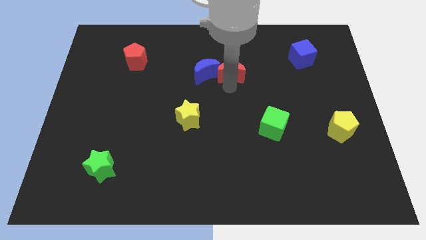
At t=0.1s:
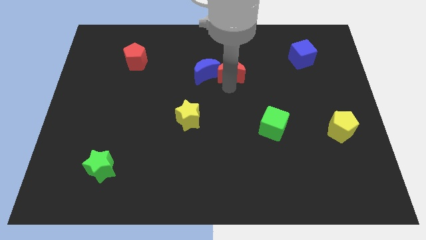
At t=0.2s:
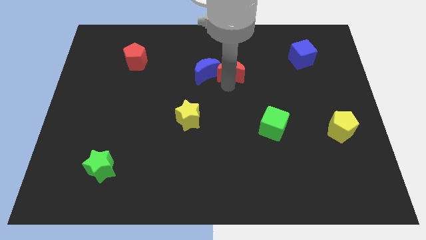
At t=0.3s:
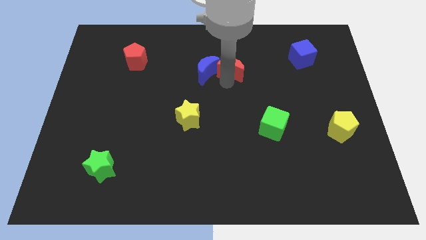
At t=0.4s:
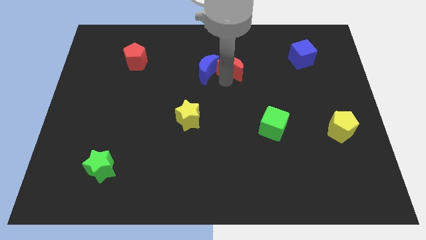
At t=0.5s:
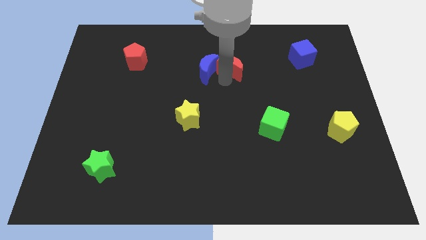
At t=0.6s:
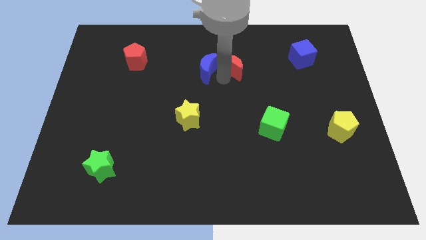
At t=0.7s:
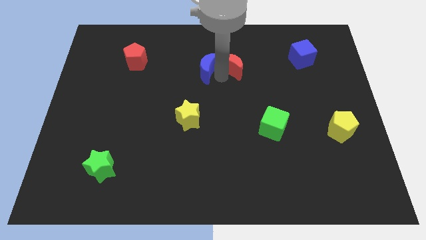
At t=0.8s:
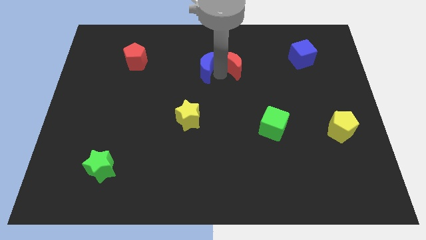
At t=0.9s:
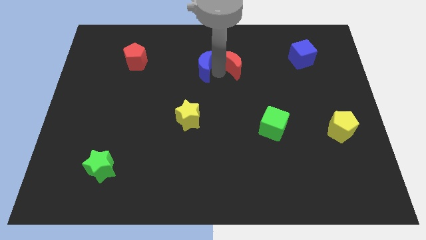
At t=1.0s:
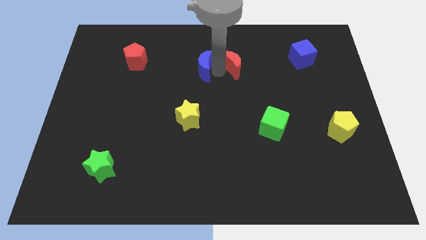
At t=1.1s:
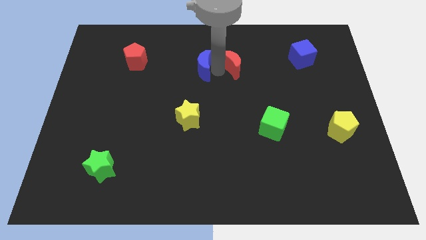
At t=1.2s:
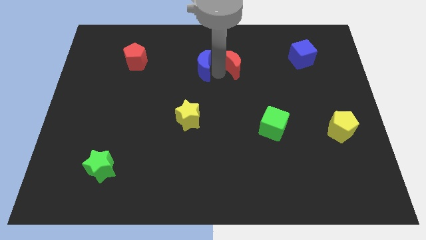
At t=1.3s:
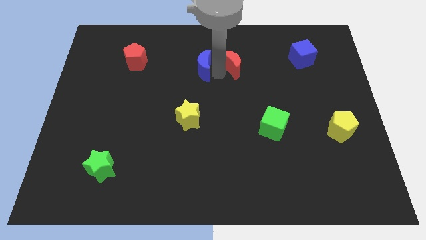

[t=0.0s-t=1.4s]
place your hand in between the blue moon and red moon

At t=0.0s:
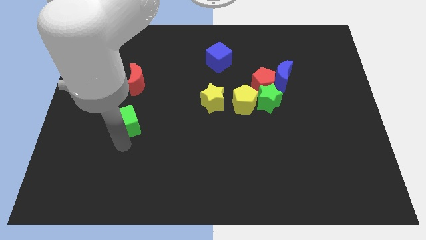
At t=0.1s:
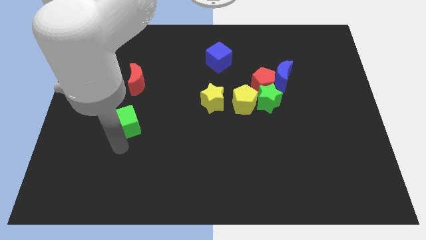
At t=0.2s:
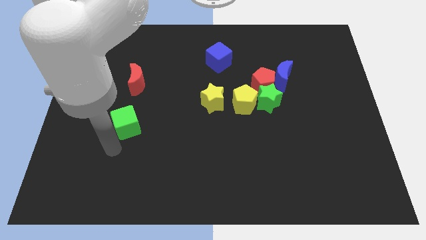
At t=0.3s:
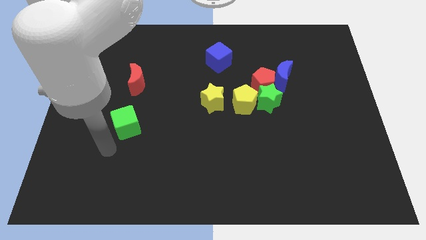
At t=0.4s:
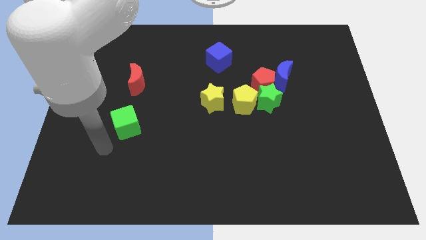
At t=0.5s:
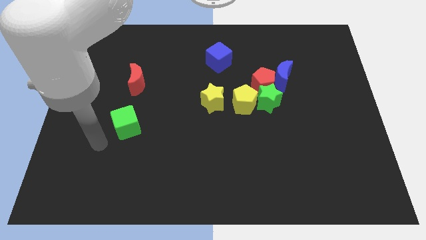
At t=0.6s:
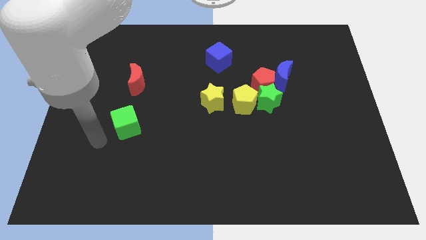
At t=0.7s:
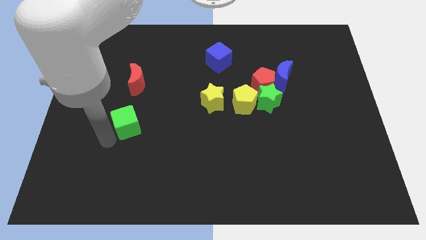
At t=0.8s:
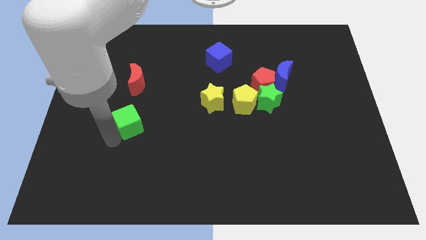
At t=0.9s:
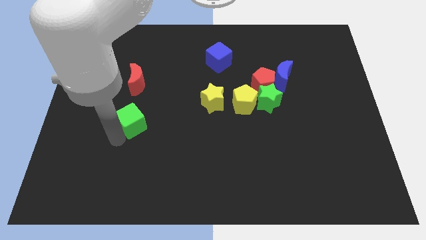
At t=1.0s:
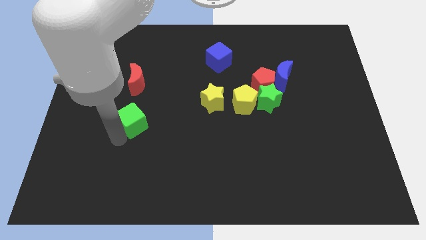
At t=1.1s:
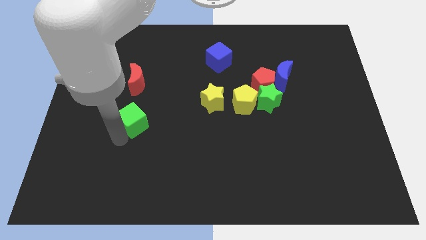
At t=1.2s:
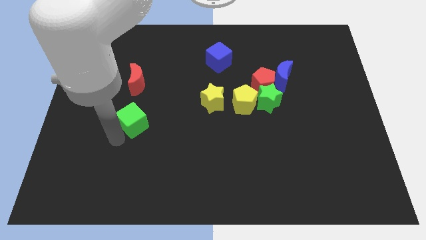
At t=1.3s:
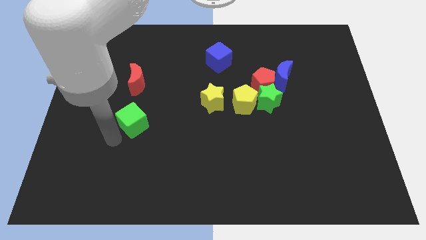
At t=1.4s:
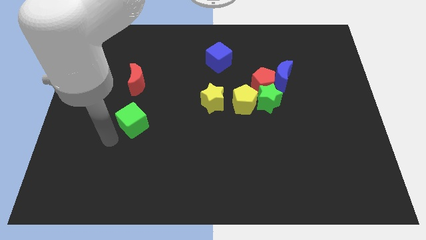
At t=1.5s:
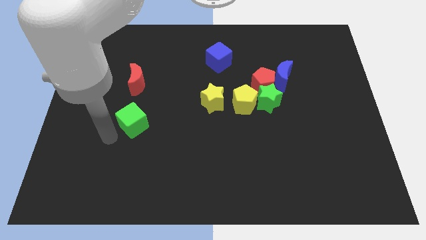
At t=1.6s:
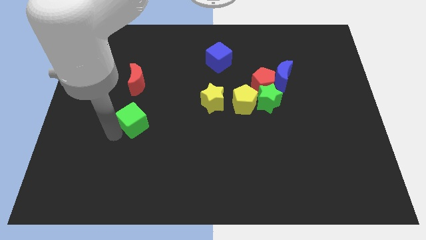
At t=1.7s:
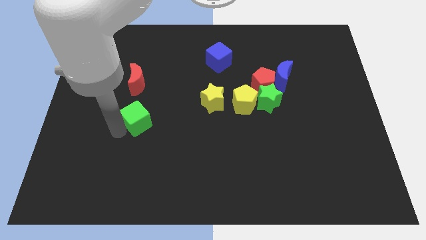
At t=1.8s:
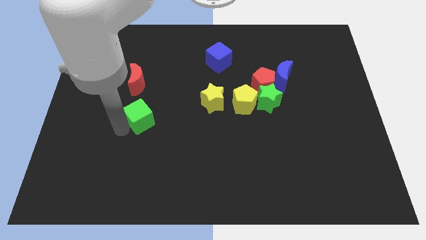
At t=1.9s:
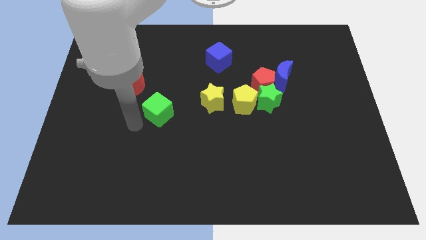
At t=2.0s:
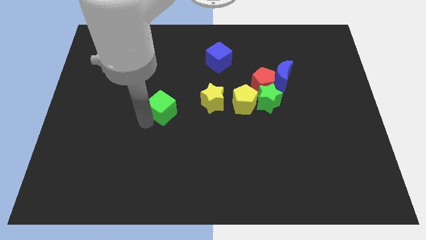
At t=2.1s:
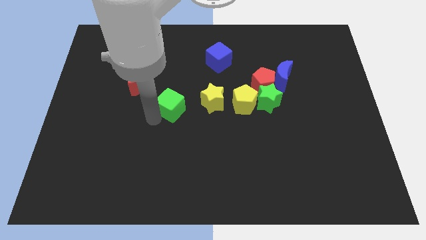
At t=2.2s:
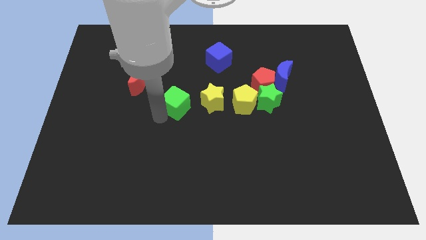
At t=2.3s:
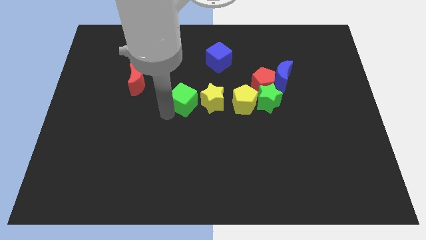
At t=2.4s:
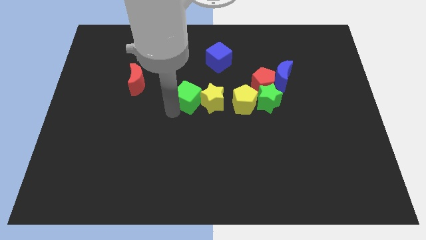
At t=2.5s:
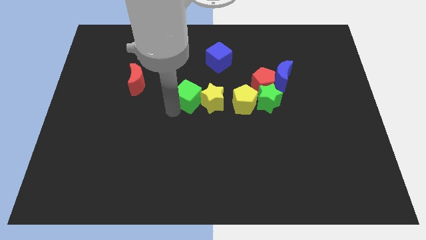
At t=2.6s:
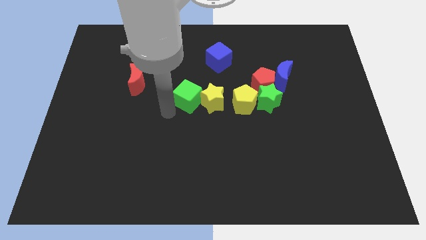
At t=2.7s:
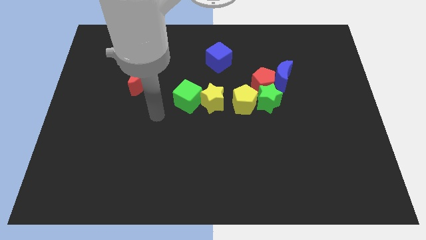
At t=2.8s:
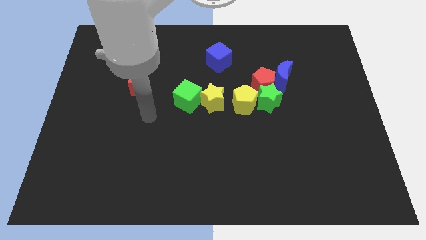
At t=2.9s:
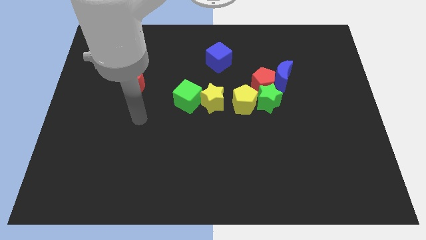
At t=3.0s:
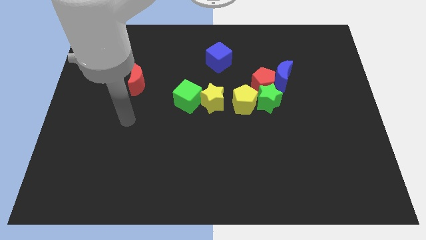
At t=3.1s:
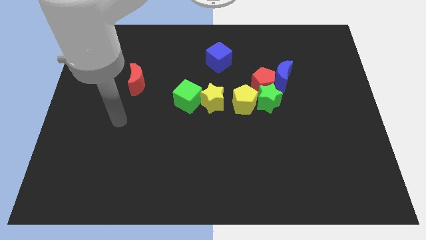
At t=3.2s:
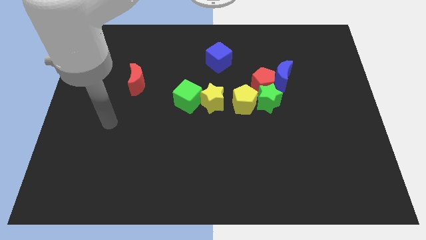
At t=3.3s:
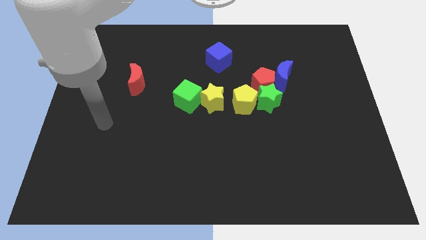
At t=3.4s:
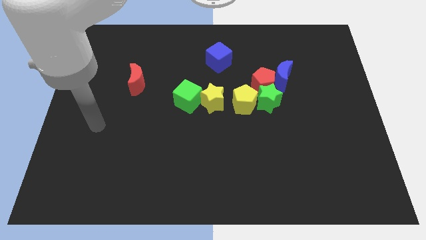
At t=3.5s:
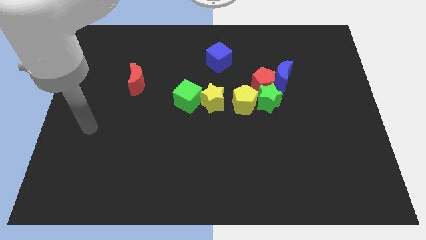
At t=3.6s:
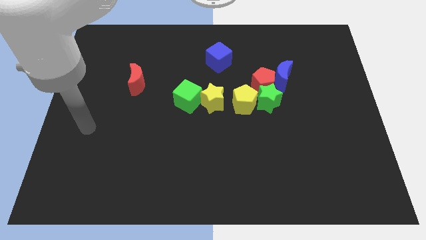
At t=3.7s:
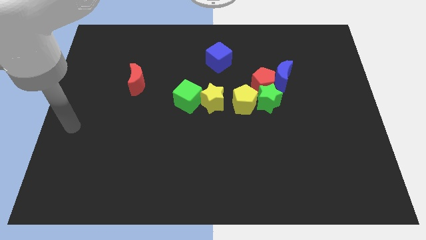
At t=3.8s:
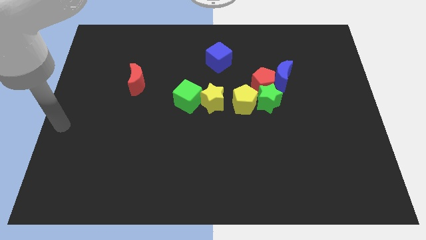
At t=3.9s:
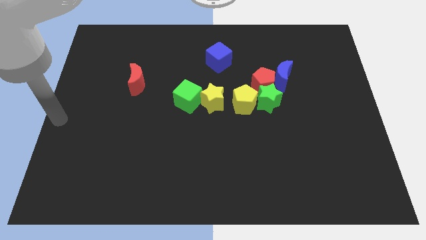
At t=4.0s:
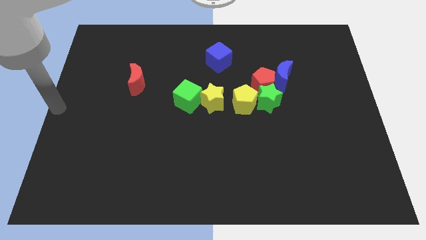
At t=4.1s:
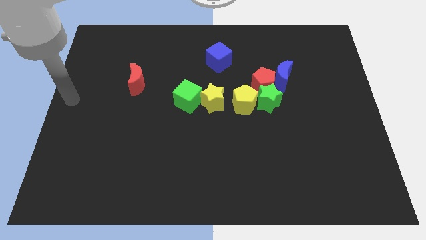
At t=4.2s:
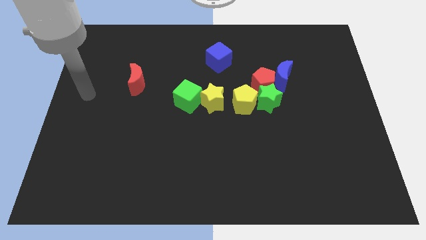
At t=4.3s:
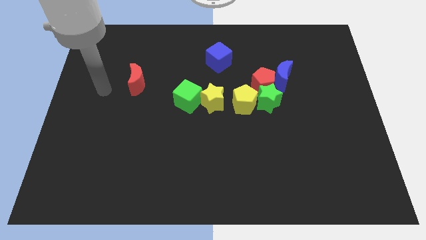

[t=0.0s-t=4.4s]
place the green cube close to the yellow star

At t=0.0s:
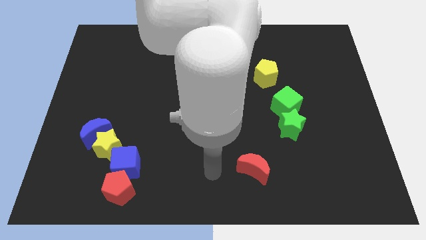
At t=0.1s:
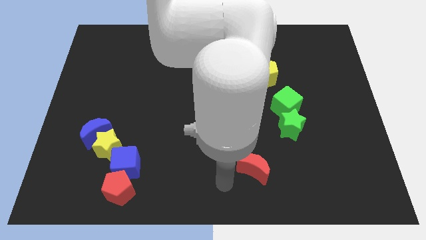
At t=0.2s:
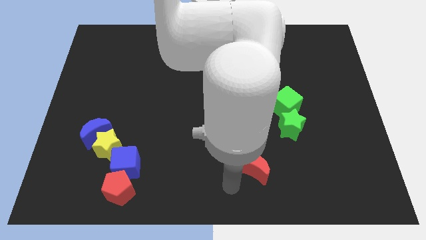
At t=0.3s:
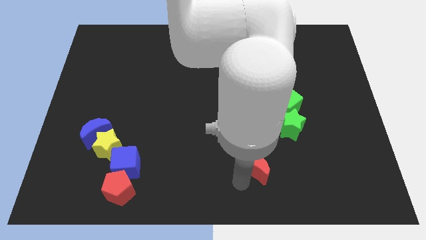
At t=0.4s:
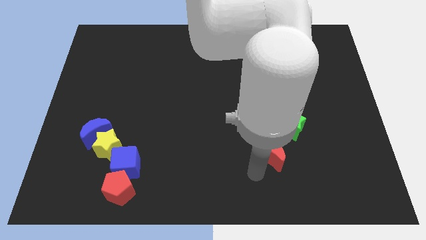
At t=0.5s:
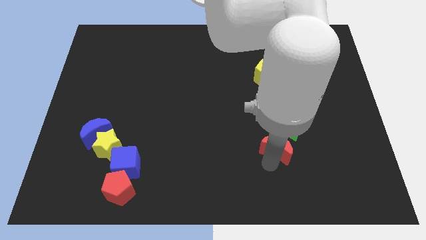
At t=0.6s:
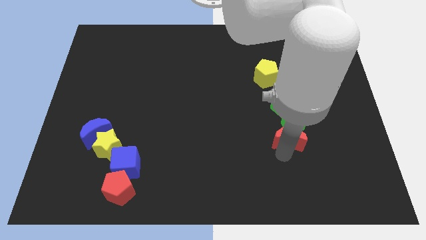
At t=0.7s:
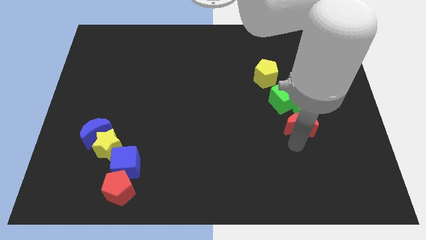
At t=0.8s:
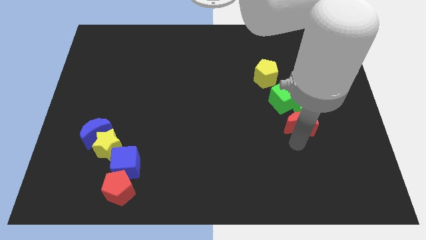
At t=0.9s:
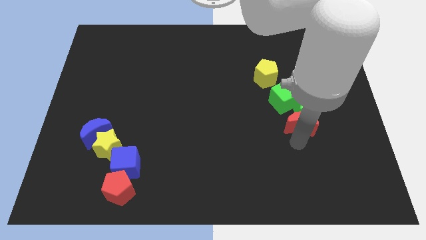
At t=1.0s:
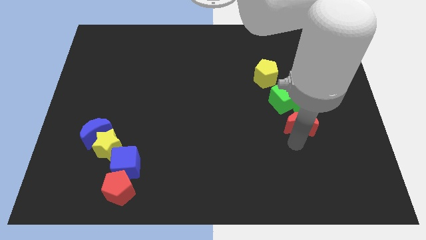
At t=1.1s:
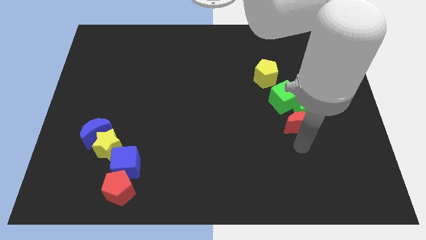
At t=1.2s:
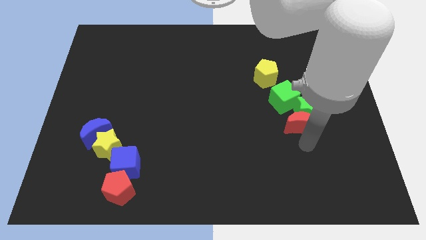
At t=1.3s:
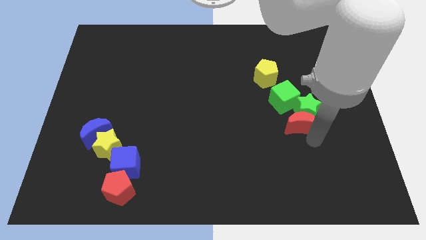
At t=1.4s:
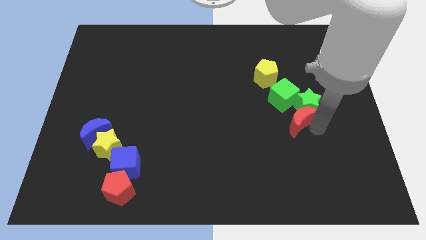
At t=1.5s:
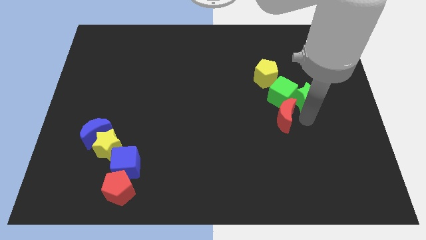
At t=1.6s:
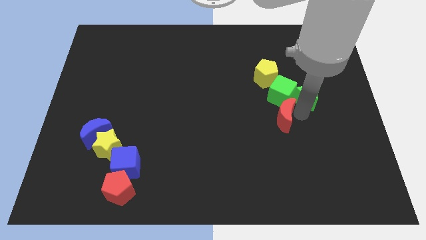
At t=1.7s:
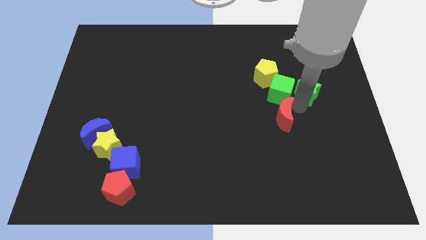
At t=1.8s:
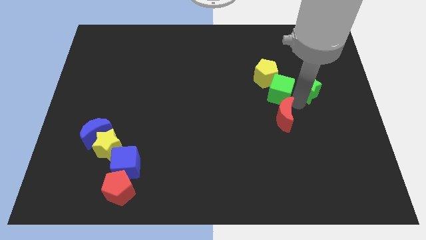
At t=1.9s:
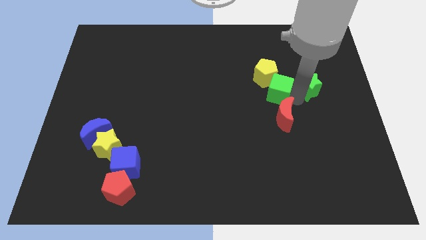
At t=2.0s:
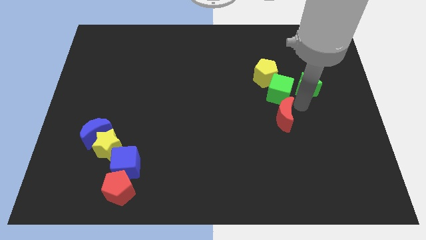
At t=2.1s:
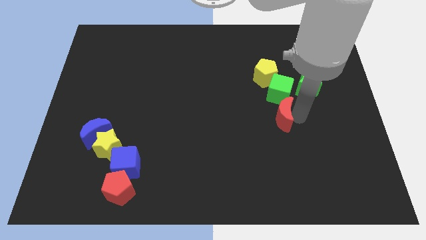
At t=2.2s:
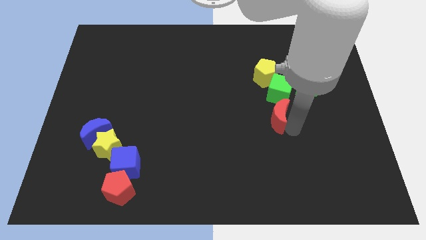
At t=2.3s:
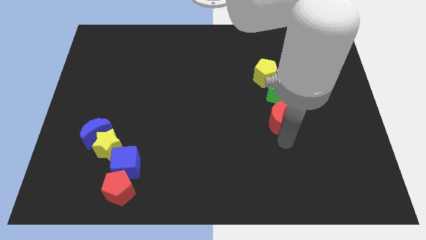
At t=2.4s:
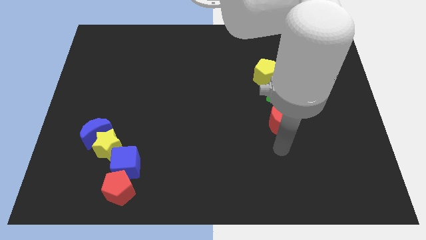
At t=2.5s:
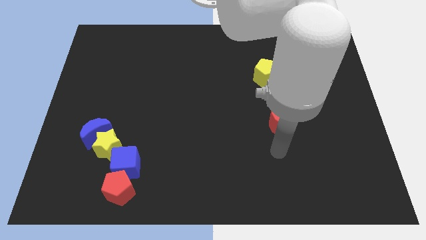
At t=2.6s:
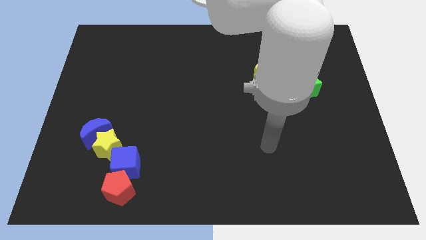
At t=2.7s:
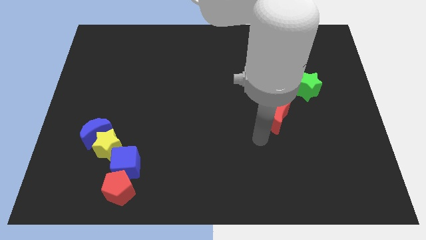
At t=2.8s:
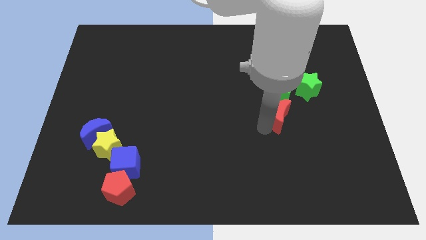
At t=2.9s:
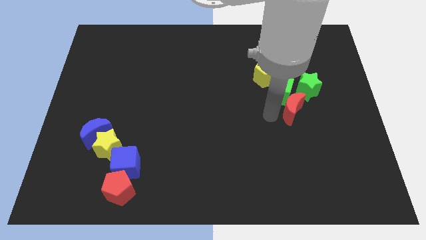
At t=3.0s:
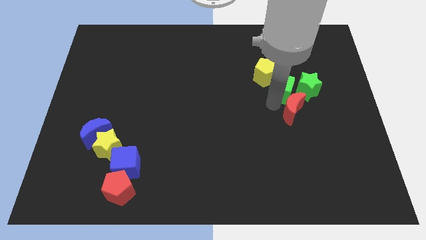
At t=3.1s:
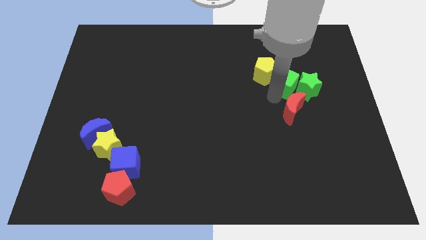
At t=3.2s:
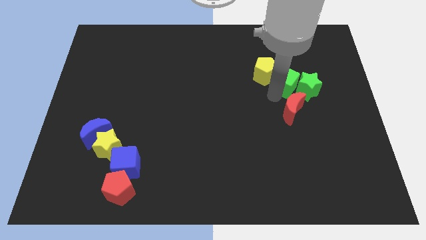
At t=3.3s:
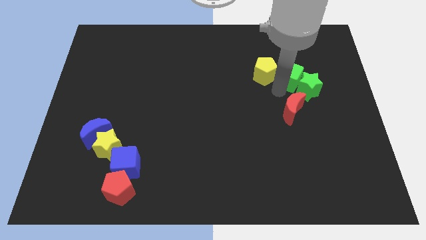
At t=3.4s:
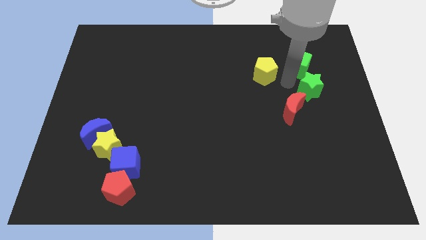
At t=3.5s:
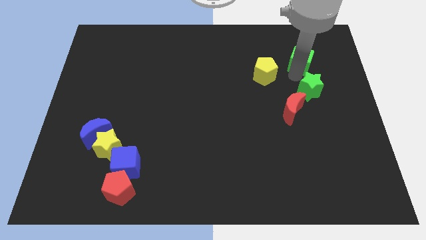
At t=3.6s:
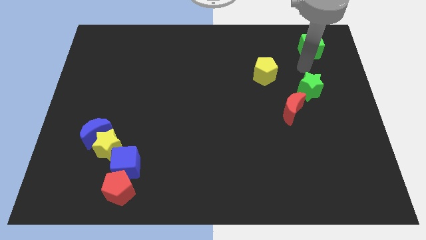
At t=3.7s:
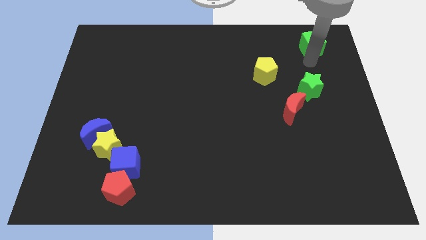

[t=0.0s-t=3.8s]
move the green cube away from the group of blocks
